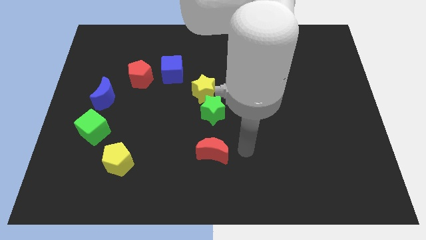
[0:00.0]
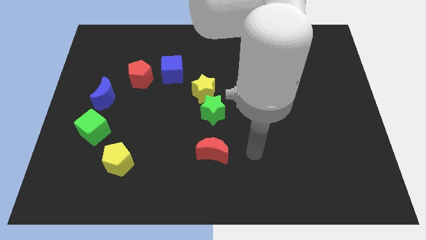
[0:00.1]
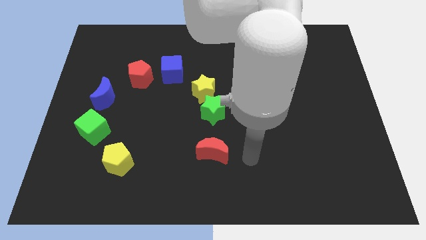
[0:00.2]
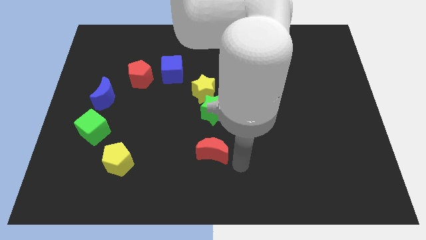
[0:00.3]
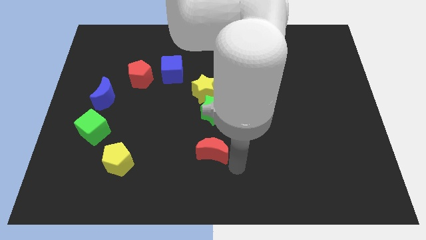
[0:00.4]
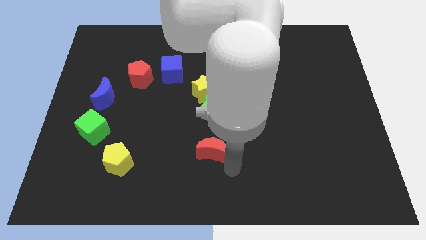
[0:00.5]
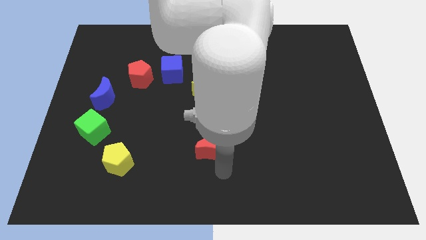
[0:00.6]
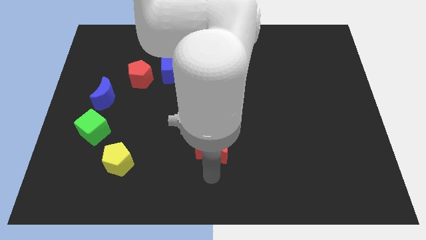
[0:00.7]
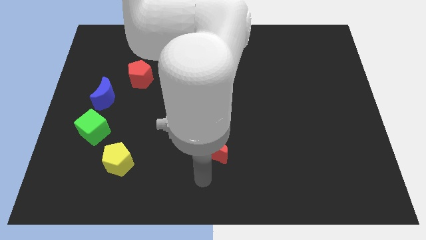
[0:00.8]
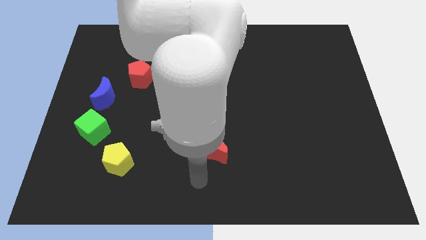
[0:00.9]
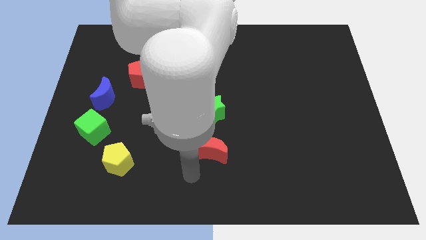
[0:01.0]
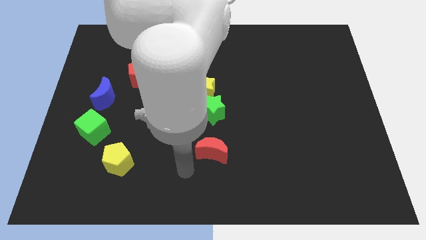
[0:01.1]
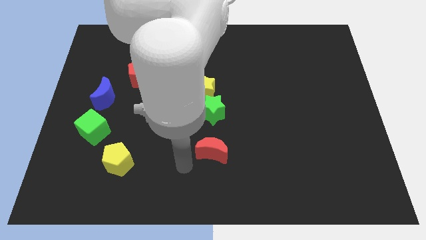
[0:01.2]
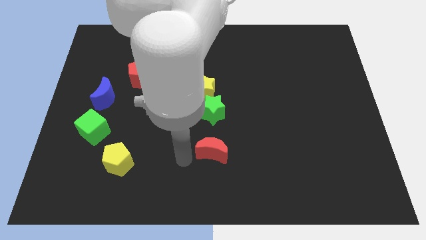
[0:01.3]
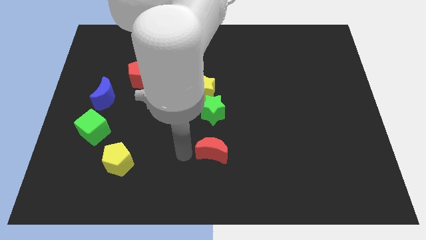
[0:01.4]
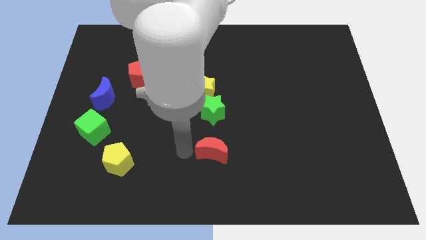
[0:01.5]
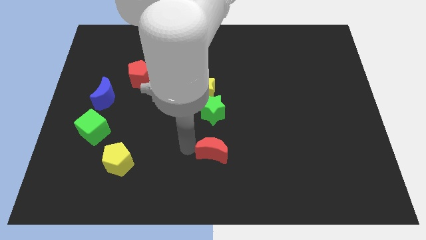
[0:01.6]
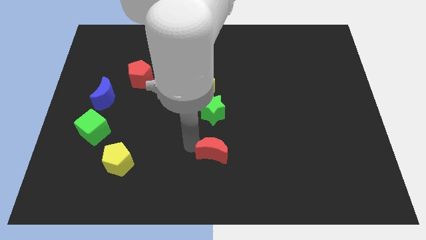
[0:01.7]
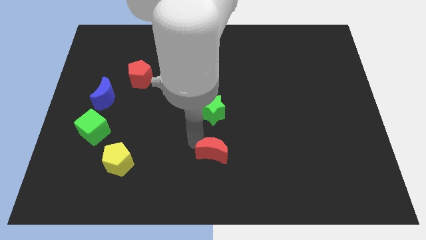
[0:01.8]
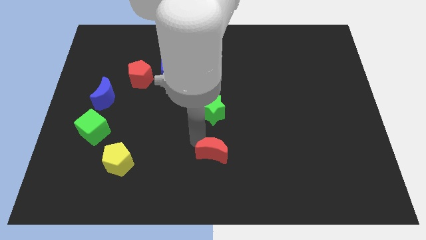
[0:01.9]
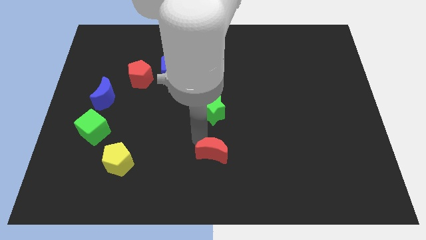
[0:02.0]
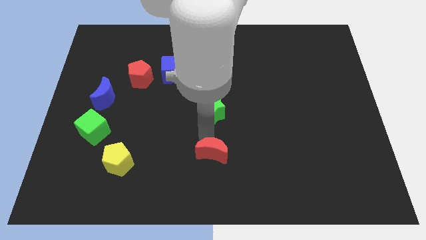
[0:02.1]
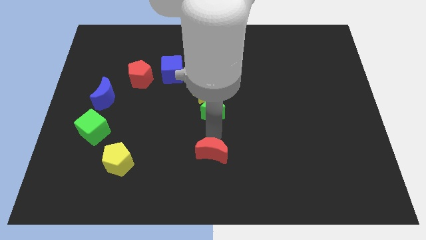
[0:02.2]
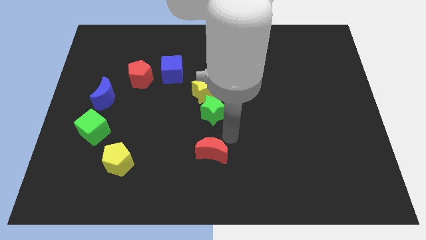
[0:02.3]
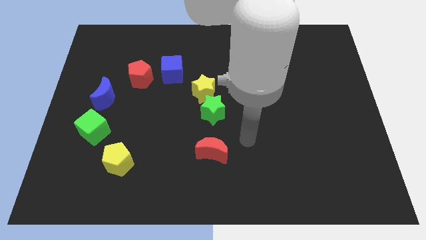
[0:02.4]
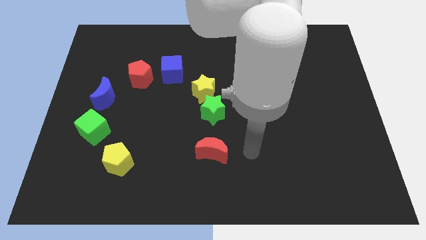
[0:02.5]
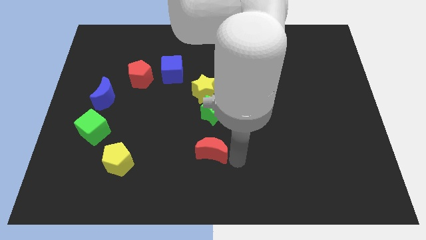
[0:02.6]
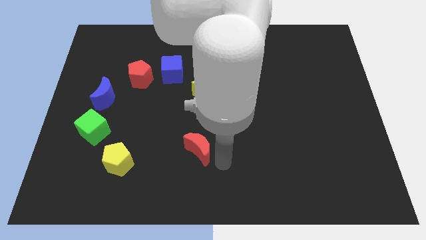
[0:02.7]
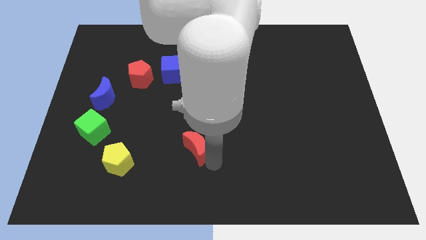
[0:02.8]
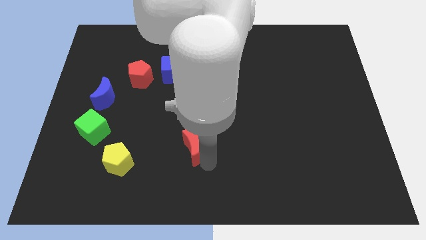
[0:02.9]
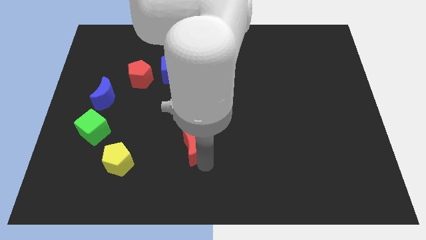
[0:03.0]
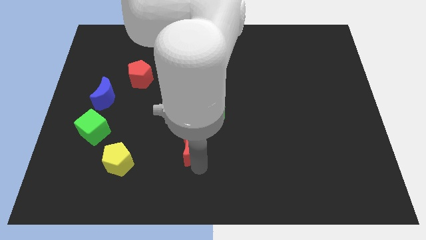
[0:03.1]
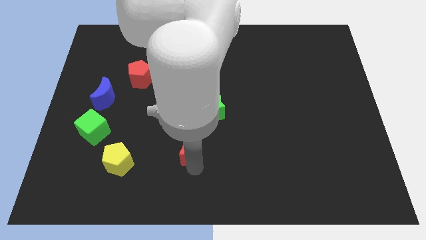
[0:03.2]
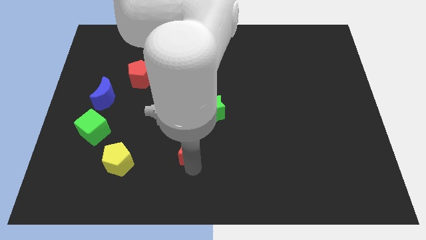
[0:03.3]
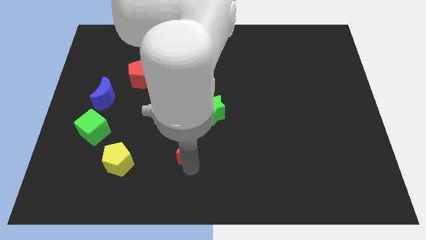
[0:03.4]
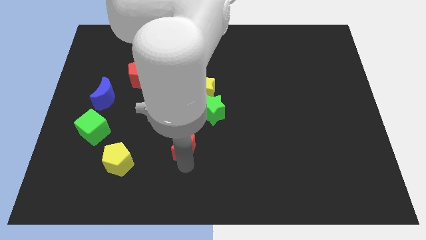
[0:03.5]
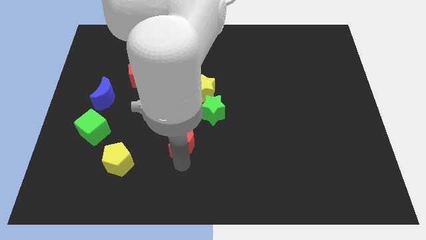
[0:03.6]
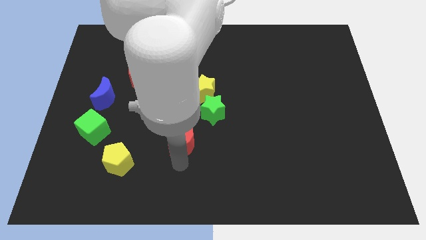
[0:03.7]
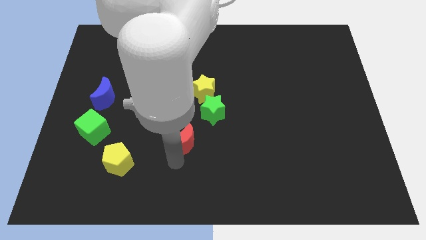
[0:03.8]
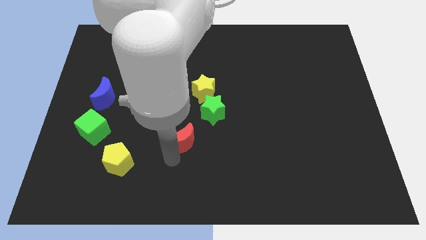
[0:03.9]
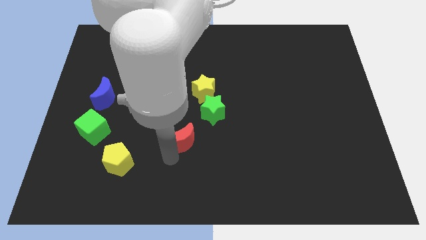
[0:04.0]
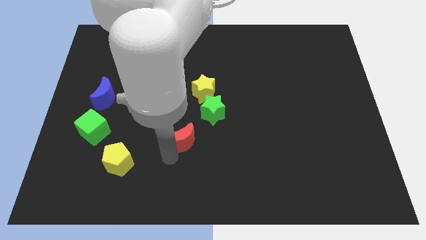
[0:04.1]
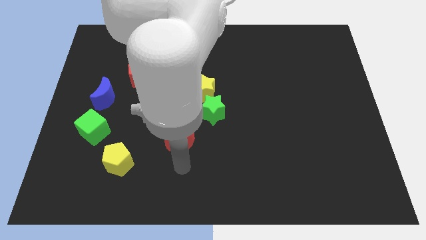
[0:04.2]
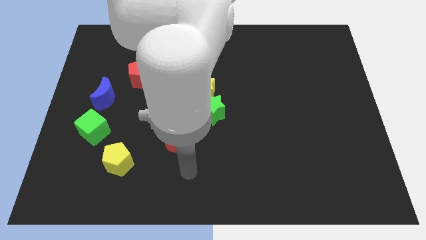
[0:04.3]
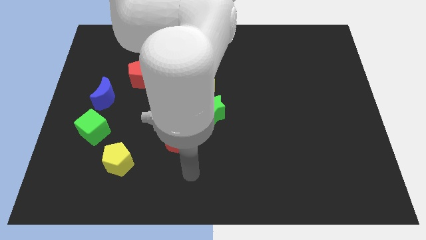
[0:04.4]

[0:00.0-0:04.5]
place the red moon in between green star and yellow pentagon to form a circle with the group of blocks

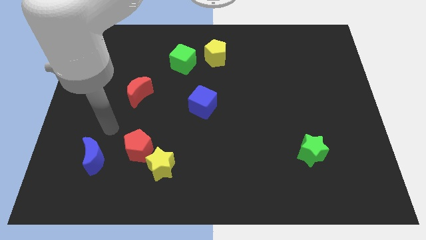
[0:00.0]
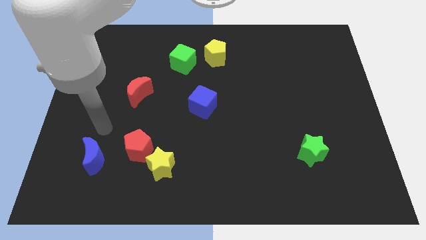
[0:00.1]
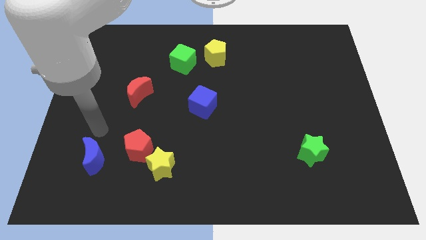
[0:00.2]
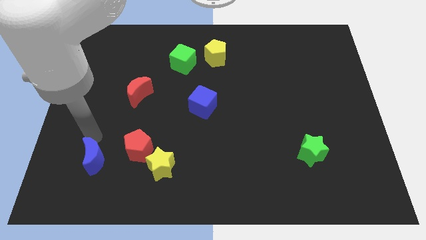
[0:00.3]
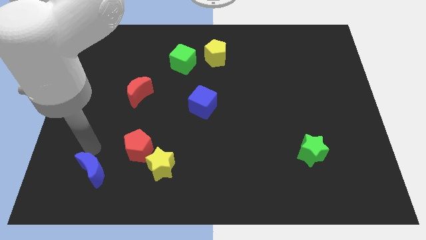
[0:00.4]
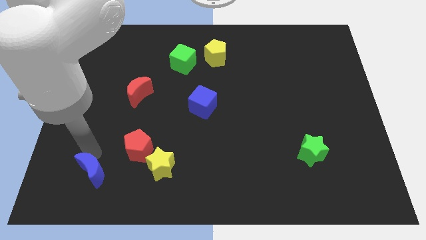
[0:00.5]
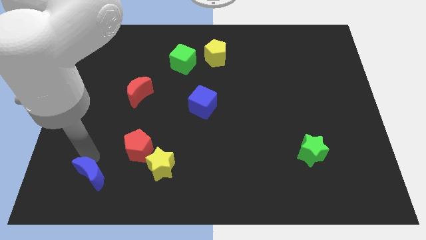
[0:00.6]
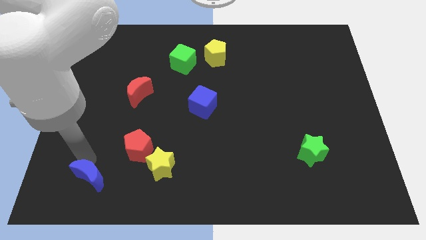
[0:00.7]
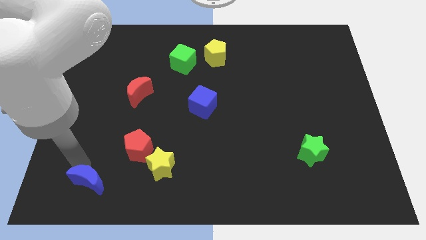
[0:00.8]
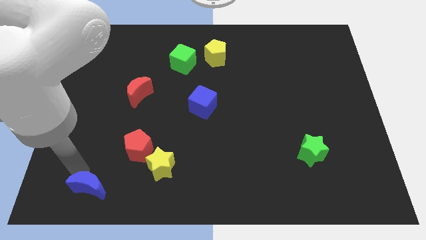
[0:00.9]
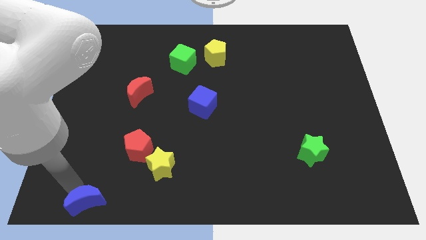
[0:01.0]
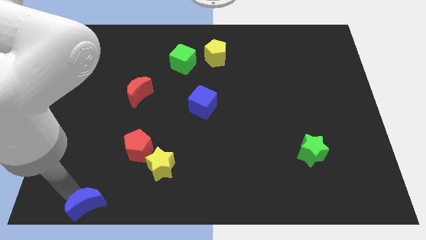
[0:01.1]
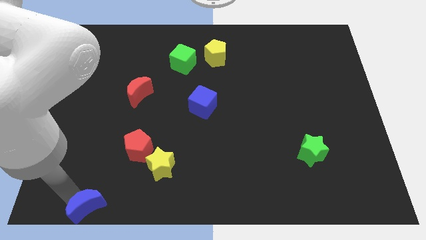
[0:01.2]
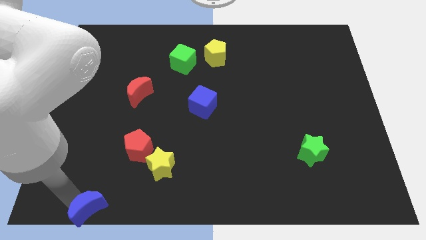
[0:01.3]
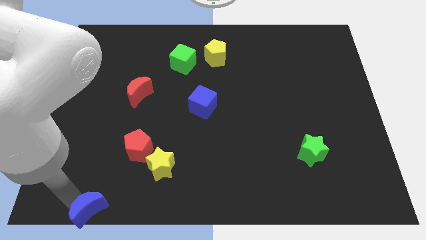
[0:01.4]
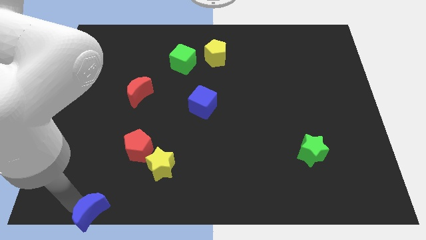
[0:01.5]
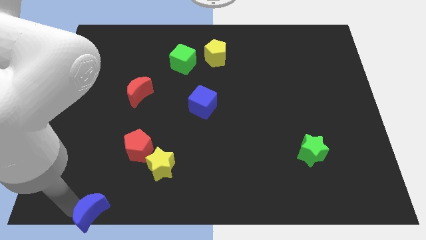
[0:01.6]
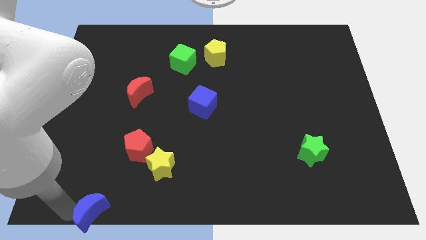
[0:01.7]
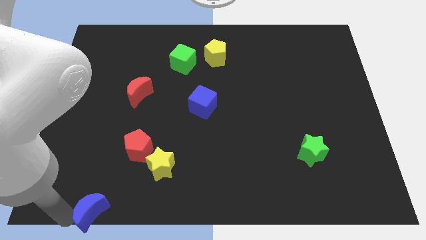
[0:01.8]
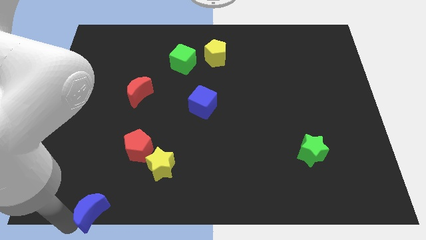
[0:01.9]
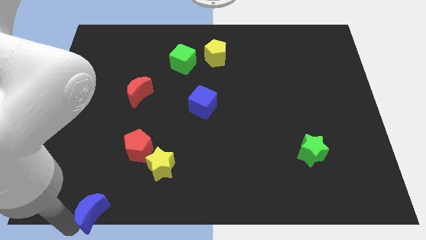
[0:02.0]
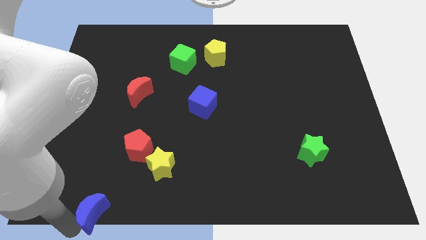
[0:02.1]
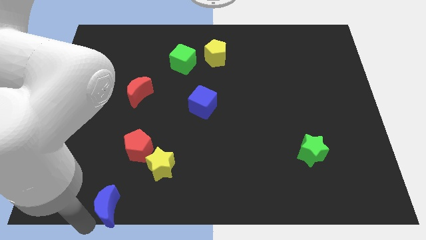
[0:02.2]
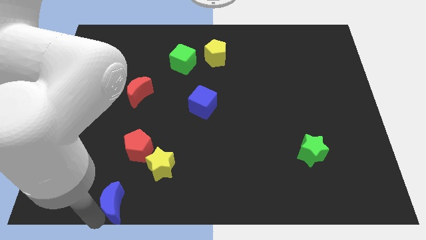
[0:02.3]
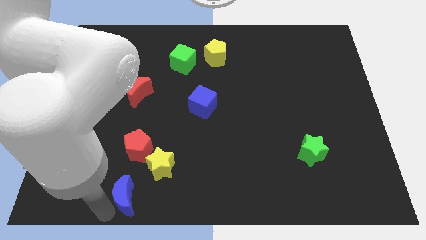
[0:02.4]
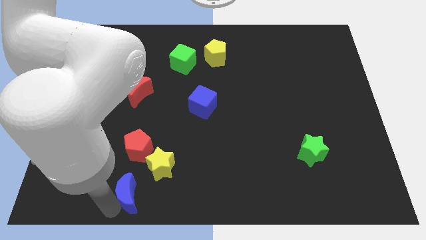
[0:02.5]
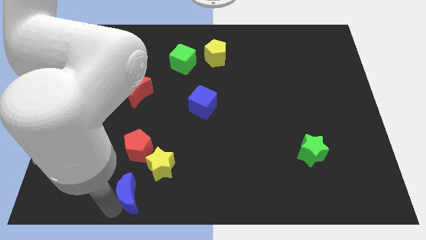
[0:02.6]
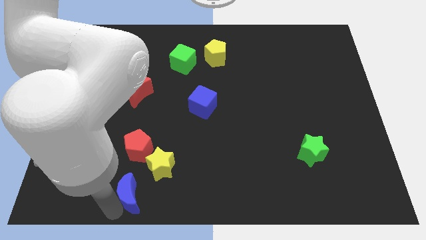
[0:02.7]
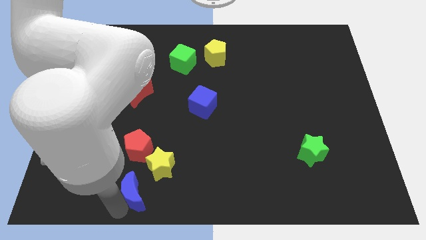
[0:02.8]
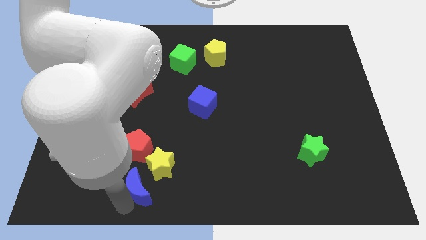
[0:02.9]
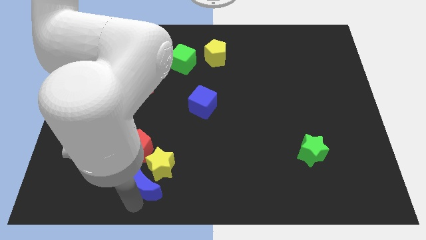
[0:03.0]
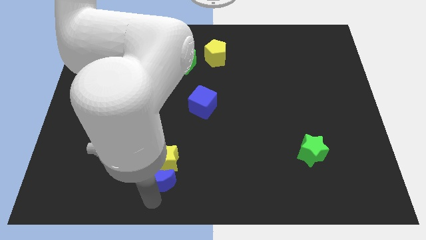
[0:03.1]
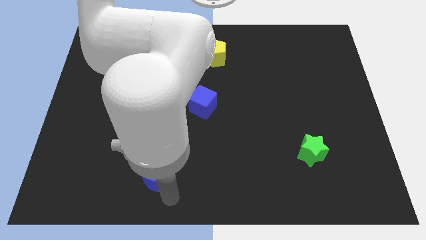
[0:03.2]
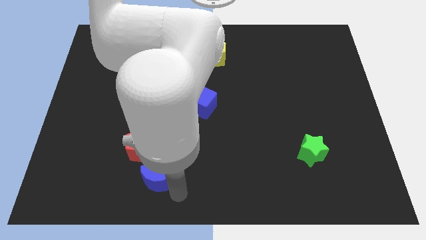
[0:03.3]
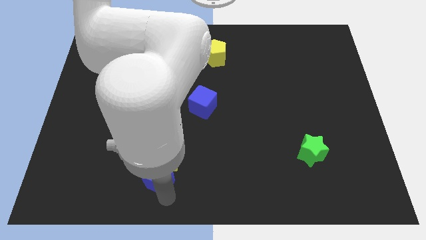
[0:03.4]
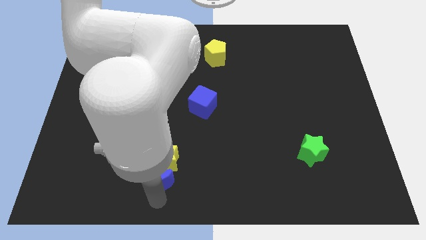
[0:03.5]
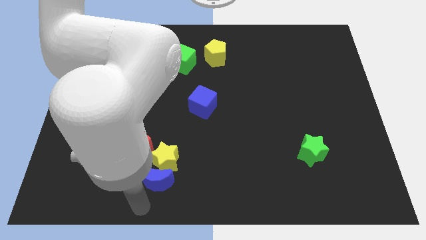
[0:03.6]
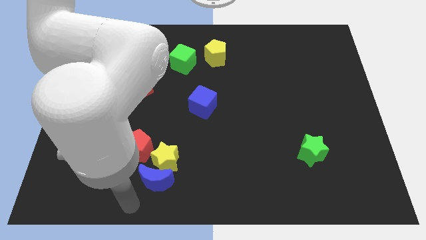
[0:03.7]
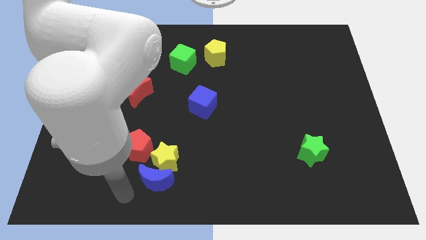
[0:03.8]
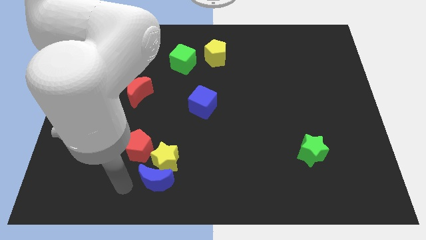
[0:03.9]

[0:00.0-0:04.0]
push the blue crescent into the yellow star

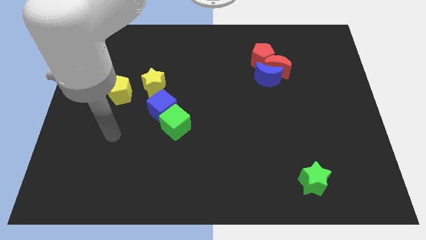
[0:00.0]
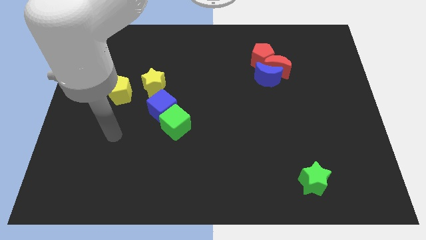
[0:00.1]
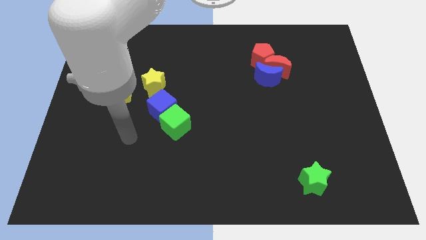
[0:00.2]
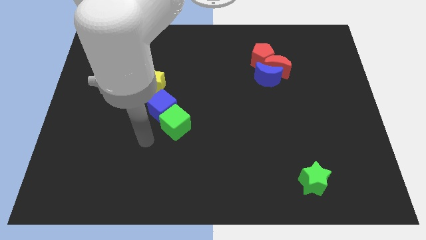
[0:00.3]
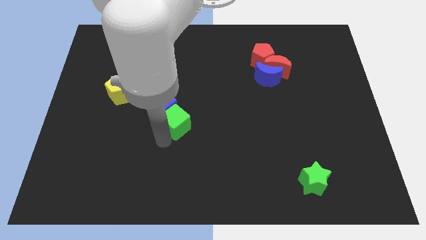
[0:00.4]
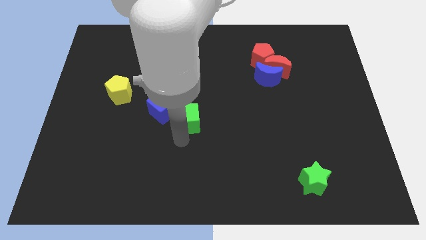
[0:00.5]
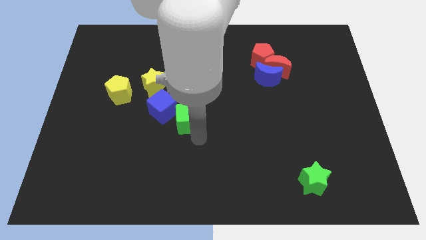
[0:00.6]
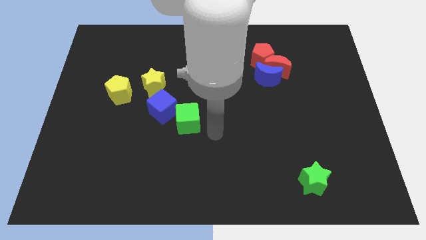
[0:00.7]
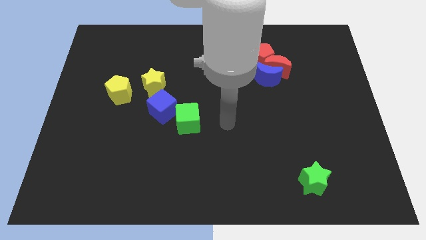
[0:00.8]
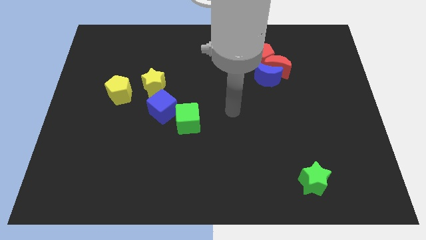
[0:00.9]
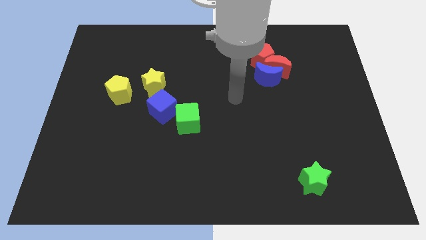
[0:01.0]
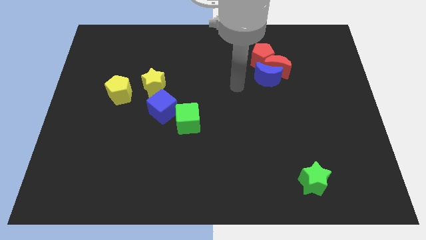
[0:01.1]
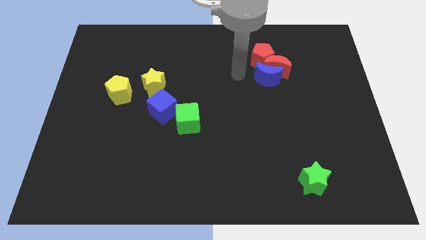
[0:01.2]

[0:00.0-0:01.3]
place your arm left to blue moon
